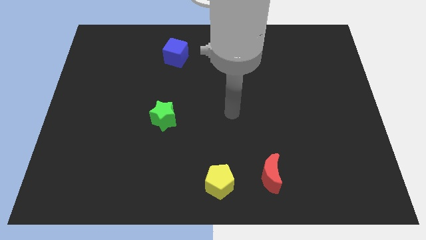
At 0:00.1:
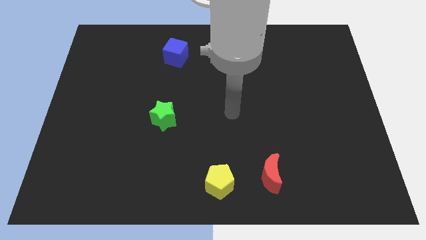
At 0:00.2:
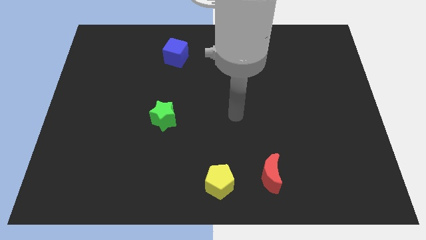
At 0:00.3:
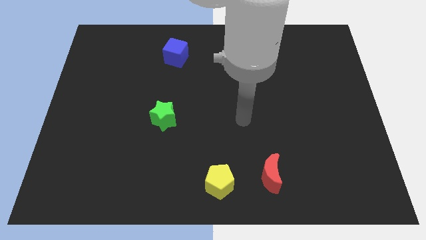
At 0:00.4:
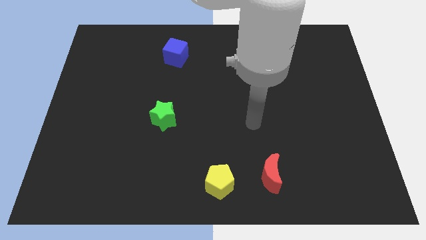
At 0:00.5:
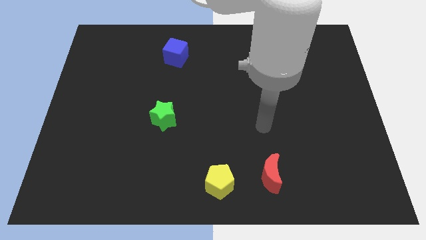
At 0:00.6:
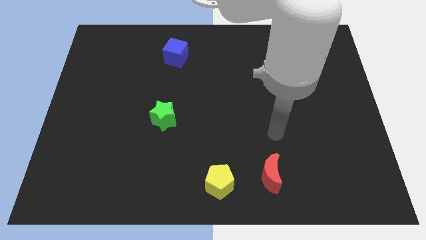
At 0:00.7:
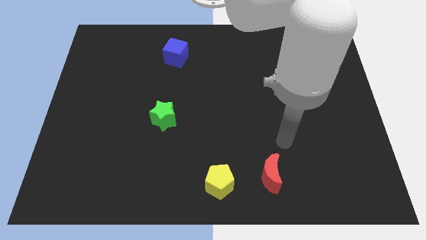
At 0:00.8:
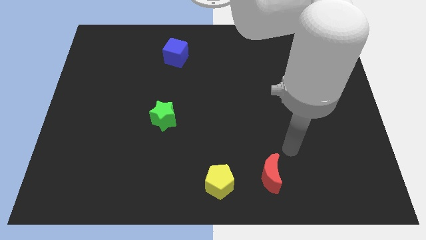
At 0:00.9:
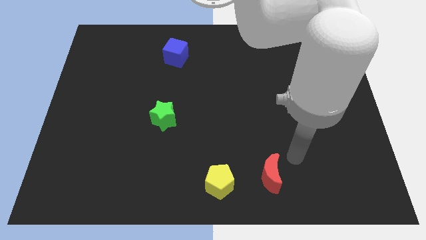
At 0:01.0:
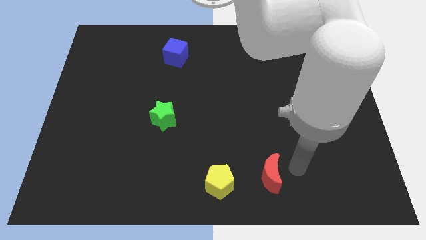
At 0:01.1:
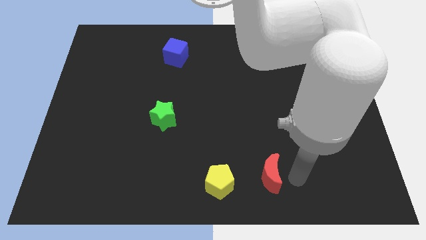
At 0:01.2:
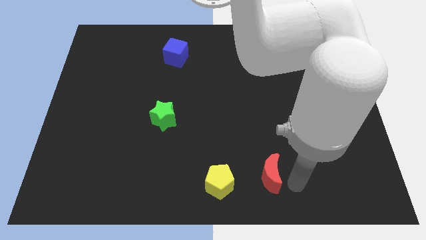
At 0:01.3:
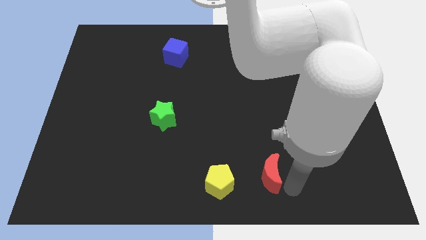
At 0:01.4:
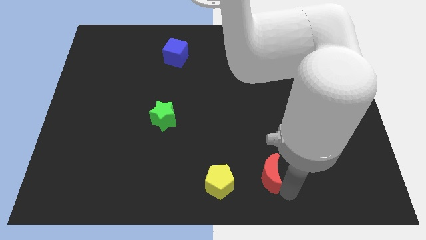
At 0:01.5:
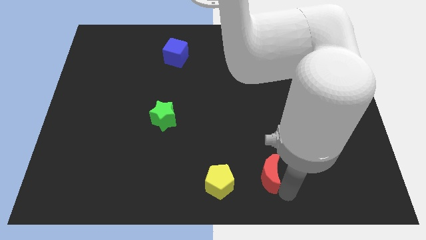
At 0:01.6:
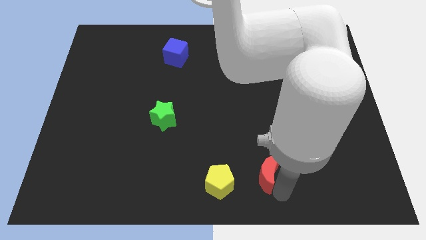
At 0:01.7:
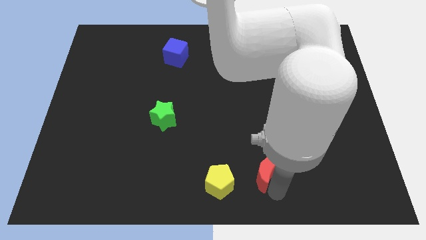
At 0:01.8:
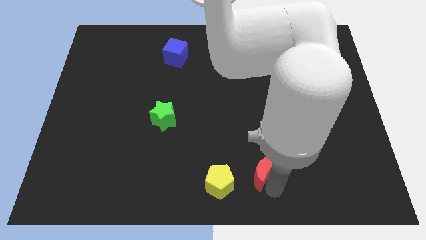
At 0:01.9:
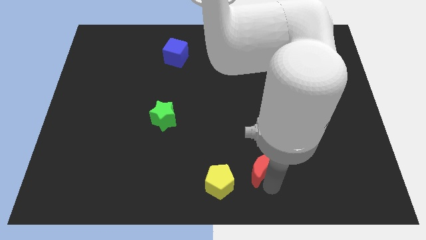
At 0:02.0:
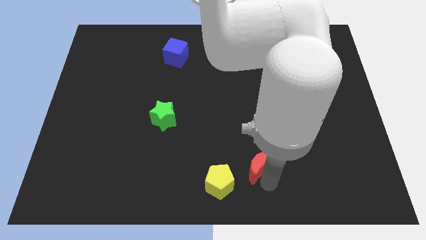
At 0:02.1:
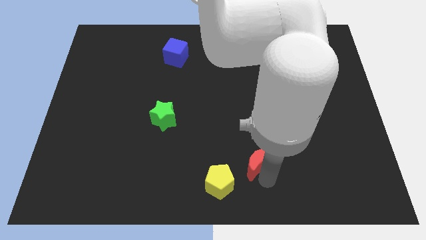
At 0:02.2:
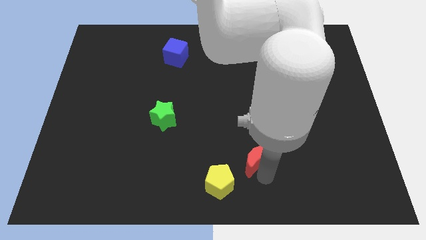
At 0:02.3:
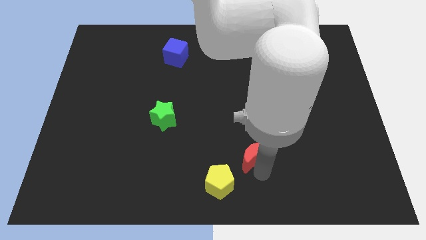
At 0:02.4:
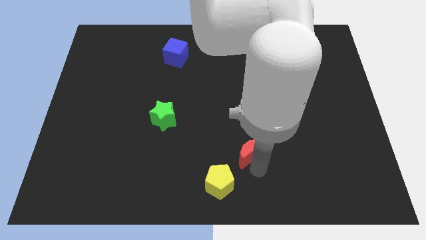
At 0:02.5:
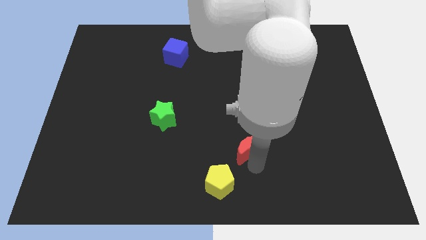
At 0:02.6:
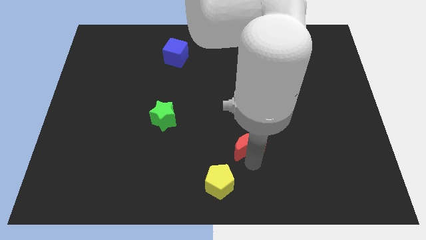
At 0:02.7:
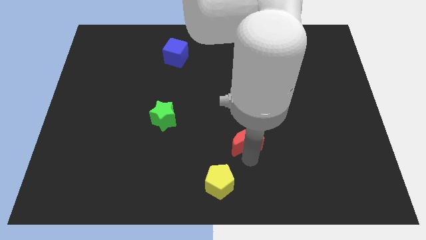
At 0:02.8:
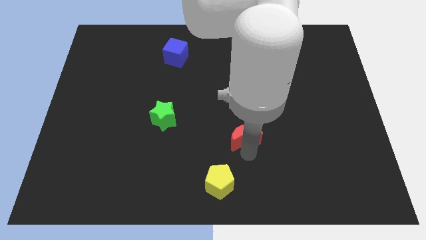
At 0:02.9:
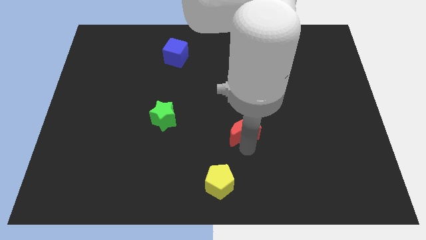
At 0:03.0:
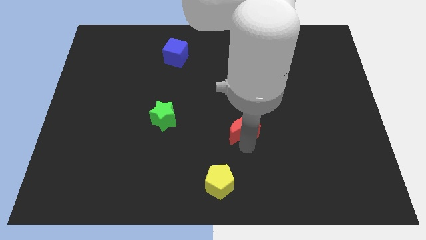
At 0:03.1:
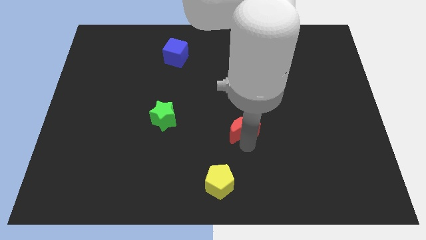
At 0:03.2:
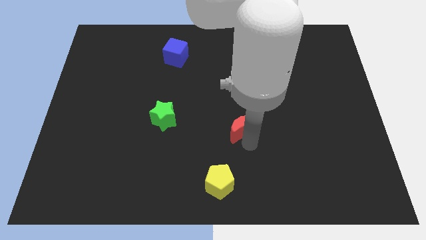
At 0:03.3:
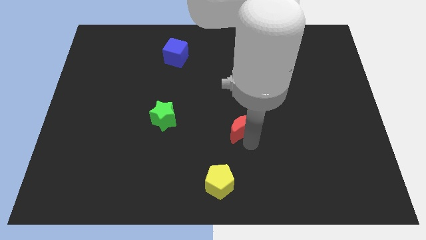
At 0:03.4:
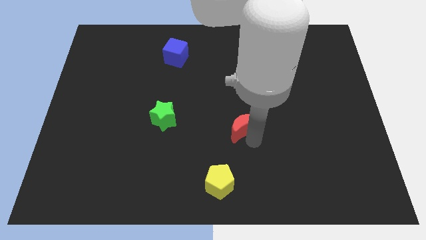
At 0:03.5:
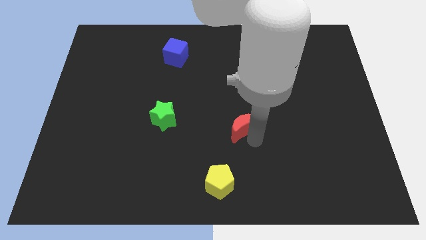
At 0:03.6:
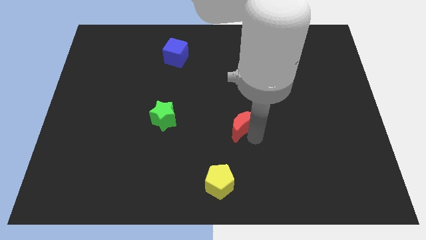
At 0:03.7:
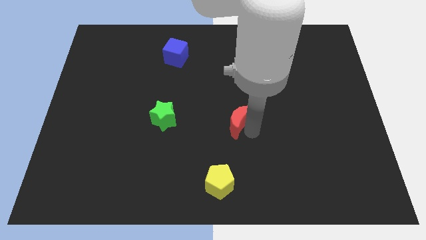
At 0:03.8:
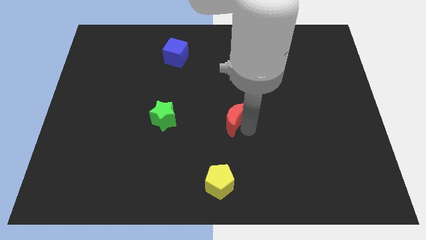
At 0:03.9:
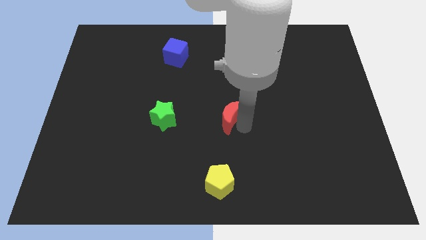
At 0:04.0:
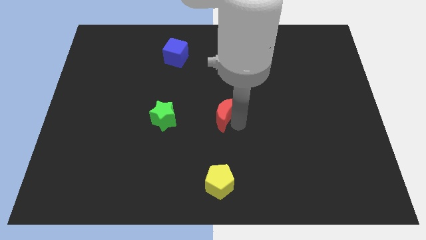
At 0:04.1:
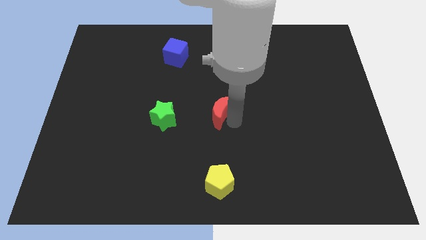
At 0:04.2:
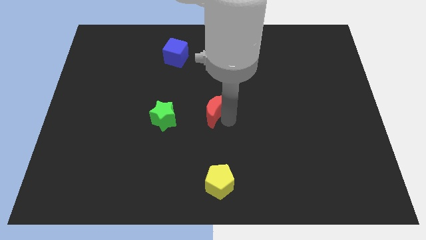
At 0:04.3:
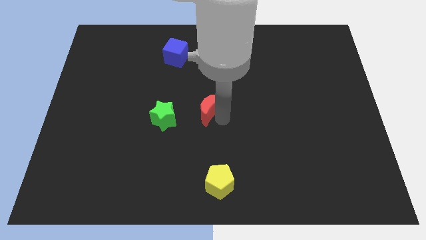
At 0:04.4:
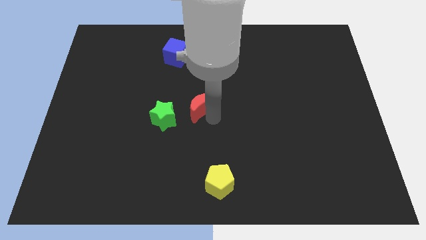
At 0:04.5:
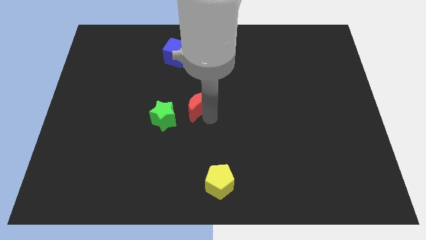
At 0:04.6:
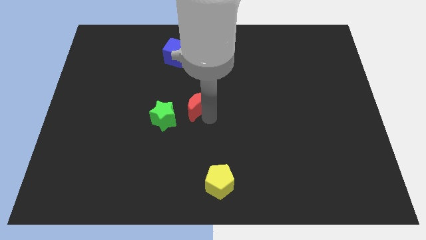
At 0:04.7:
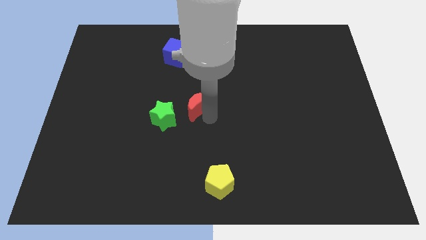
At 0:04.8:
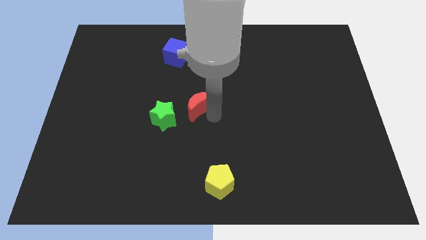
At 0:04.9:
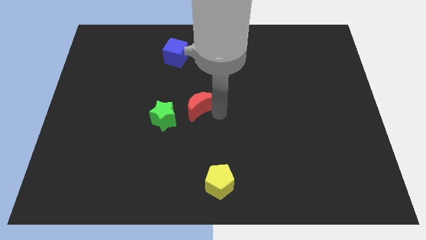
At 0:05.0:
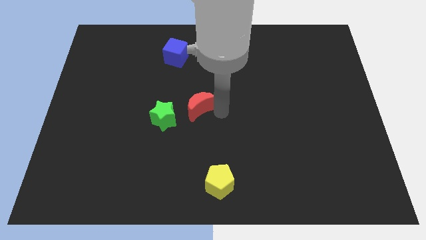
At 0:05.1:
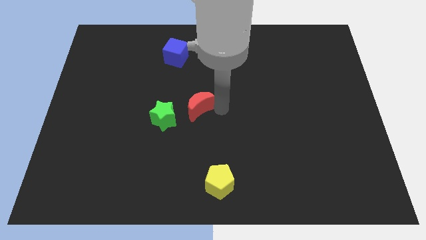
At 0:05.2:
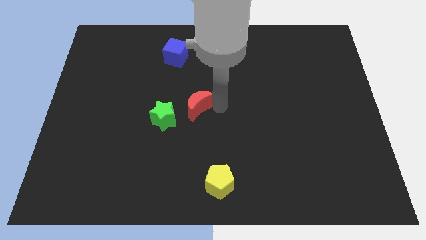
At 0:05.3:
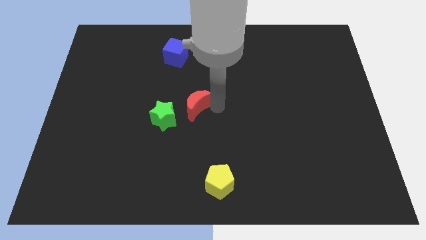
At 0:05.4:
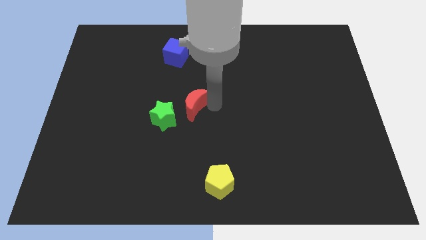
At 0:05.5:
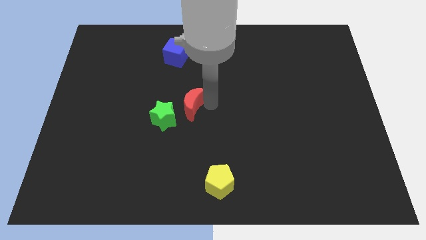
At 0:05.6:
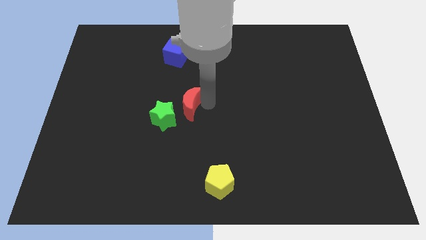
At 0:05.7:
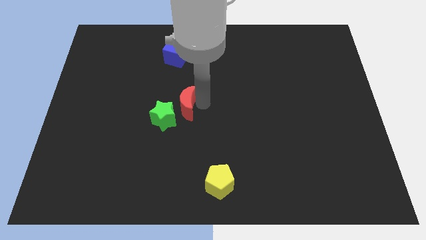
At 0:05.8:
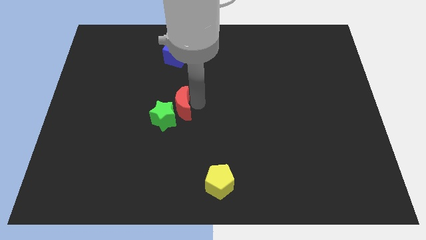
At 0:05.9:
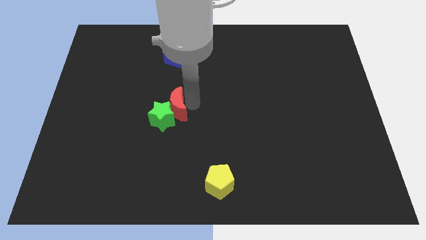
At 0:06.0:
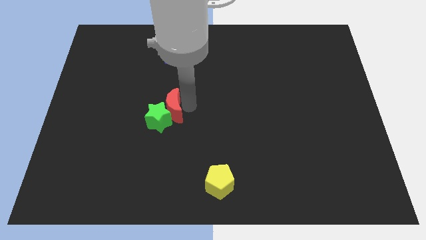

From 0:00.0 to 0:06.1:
slide the red moon next to the green star

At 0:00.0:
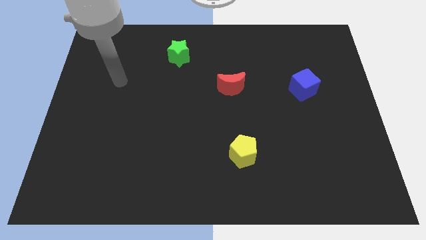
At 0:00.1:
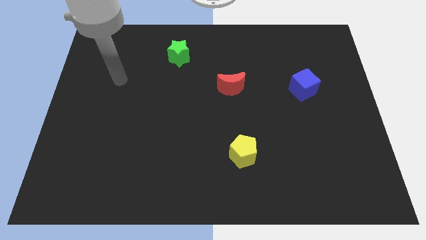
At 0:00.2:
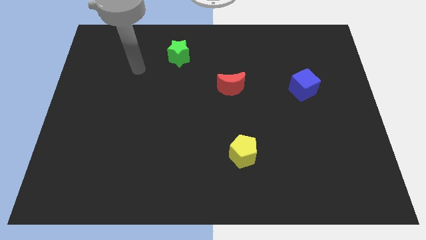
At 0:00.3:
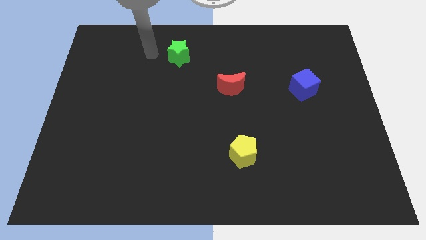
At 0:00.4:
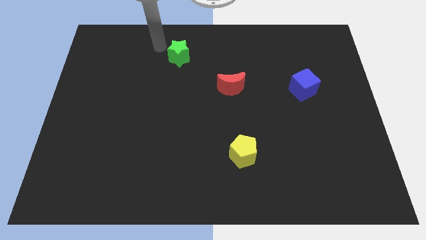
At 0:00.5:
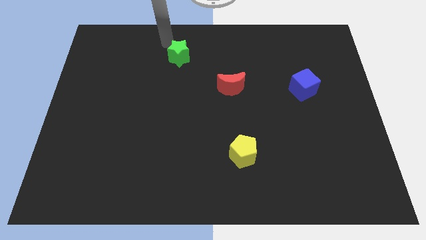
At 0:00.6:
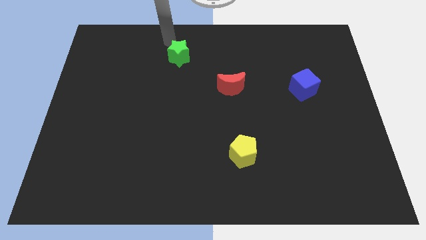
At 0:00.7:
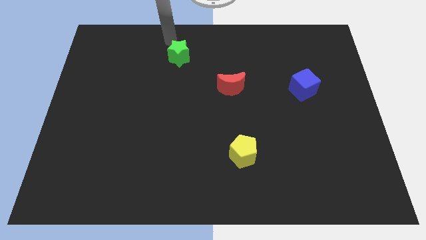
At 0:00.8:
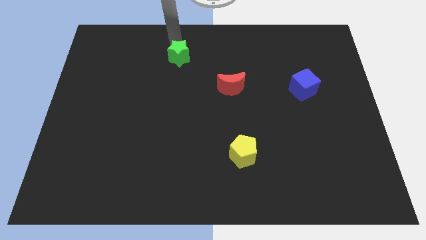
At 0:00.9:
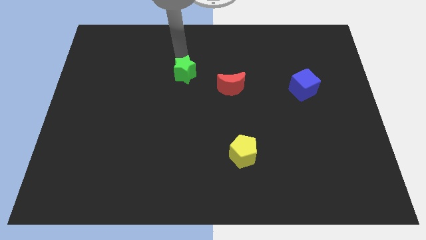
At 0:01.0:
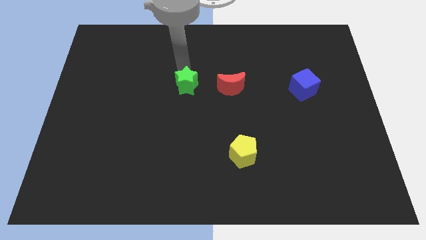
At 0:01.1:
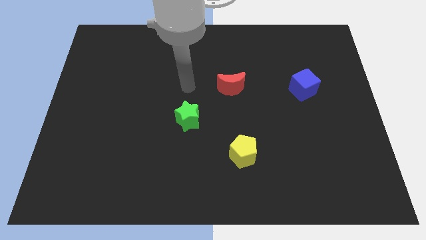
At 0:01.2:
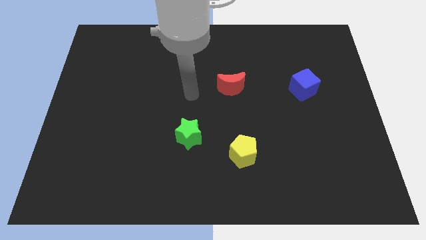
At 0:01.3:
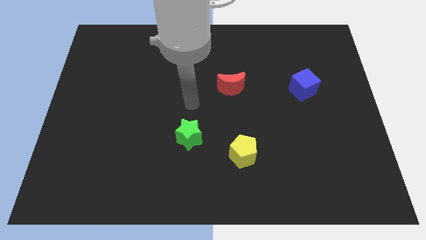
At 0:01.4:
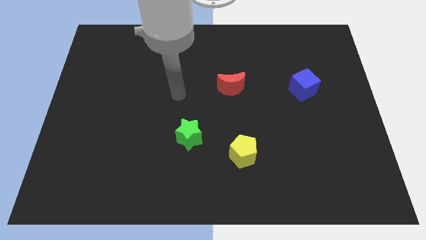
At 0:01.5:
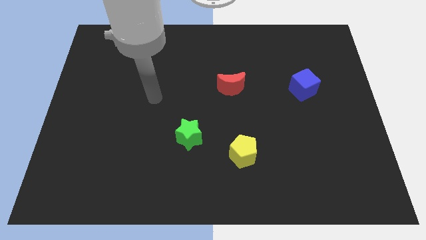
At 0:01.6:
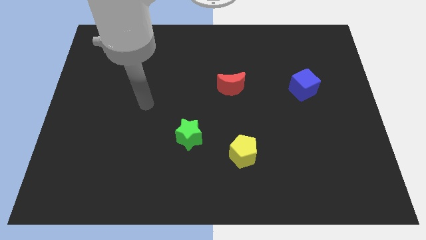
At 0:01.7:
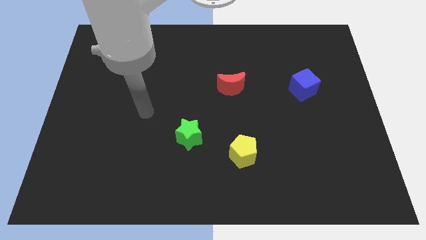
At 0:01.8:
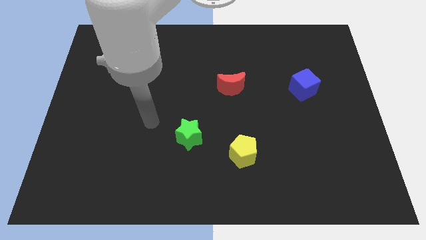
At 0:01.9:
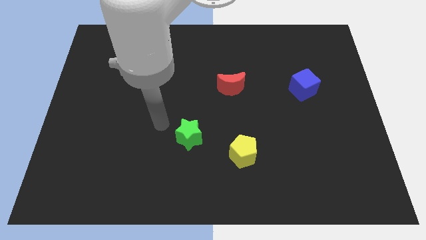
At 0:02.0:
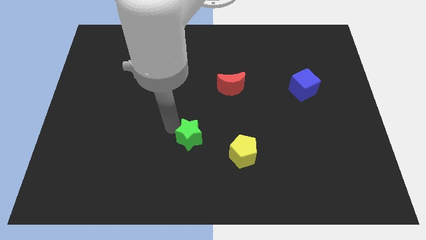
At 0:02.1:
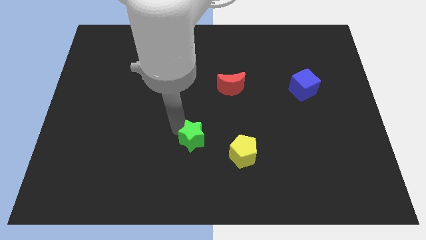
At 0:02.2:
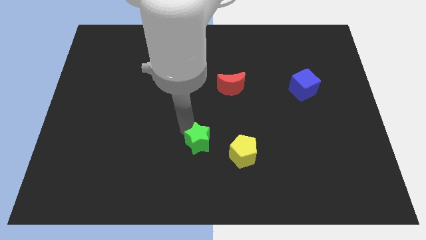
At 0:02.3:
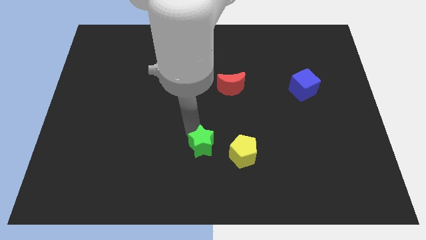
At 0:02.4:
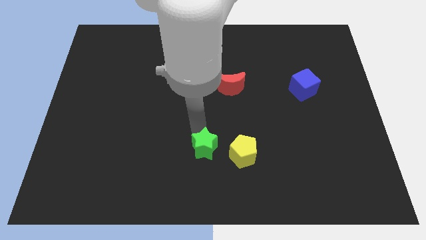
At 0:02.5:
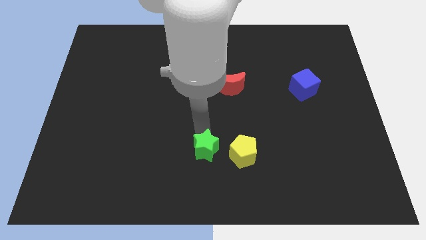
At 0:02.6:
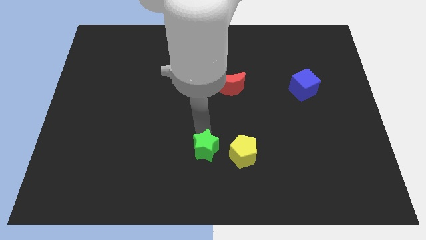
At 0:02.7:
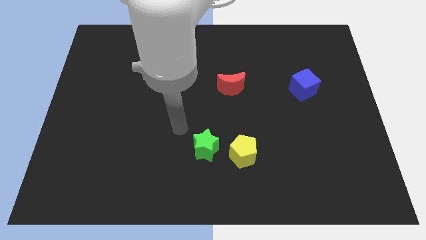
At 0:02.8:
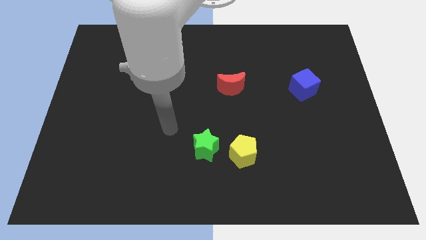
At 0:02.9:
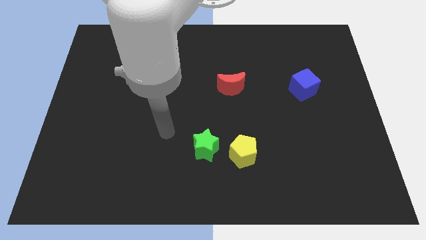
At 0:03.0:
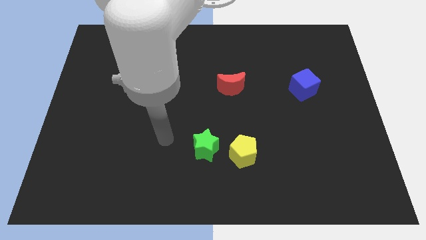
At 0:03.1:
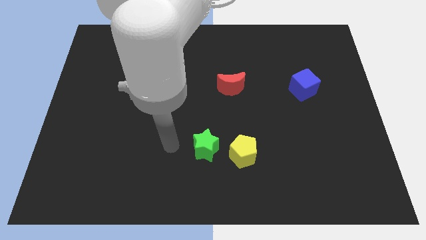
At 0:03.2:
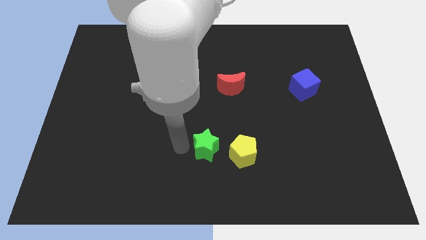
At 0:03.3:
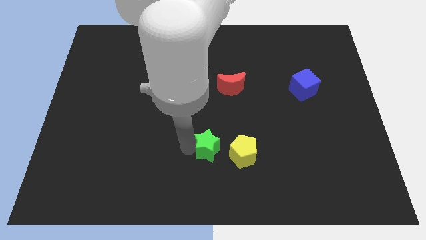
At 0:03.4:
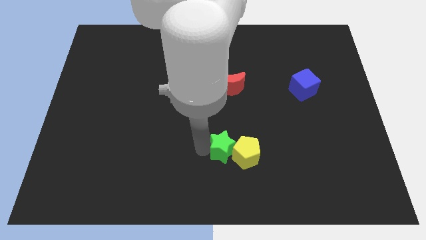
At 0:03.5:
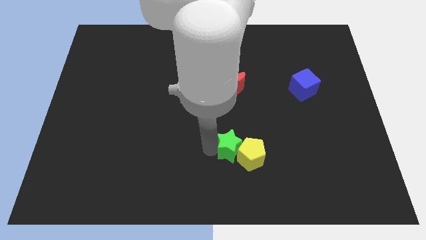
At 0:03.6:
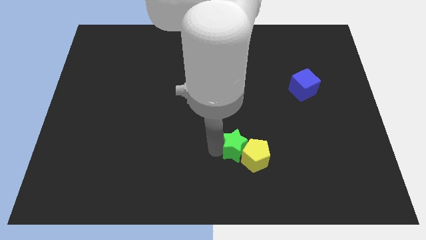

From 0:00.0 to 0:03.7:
slide the green star next to the yellow block
